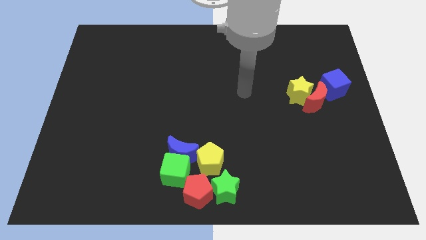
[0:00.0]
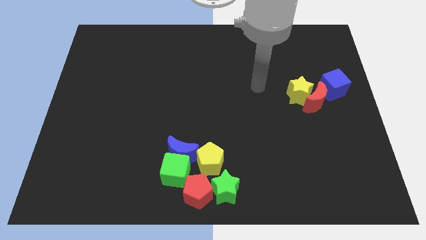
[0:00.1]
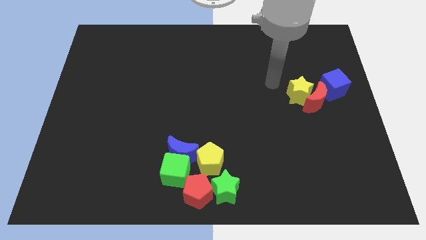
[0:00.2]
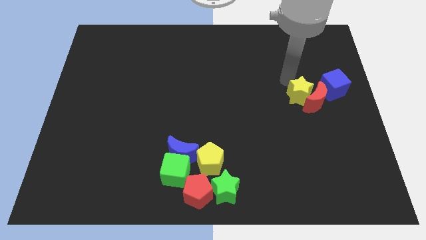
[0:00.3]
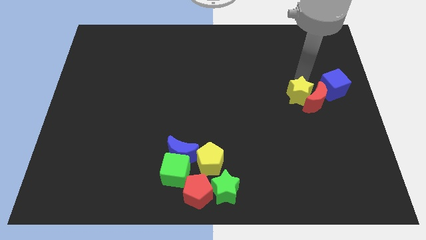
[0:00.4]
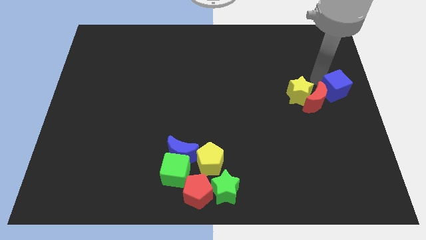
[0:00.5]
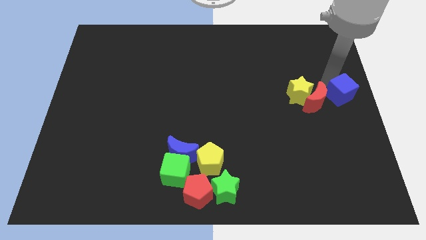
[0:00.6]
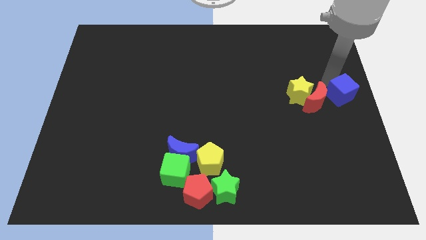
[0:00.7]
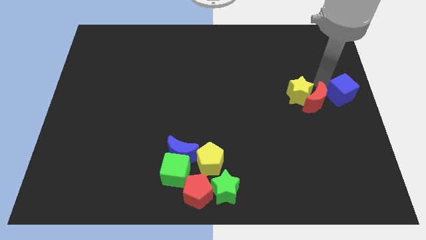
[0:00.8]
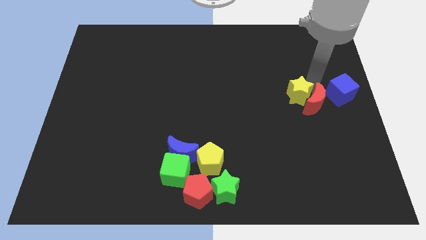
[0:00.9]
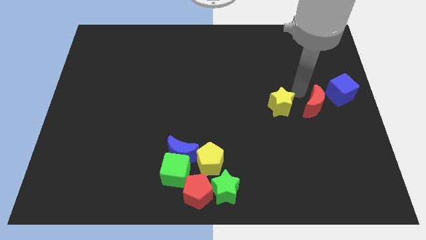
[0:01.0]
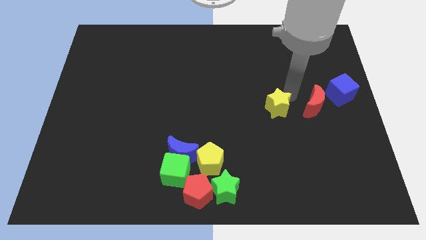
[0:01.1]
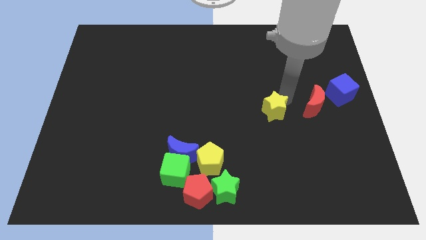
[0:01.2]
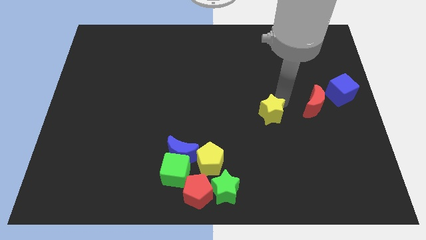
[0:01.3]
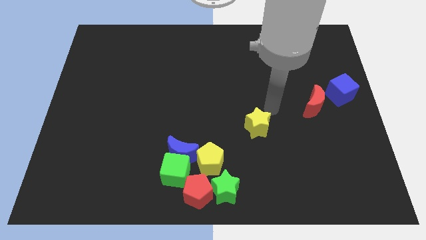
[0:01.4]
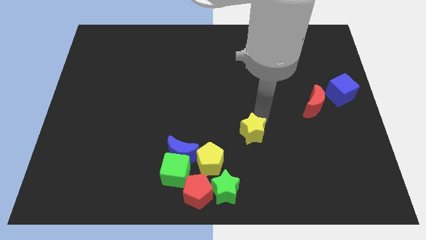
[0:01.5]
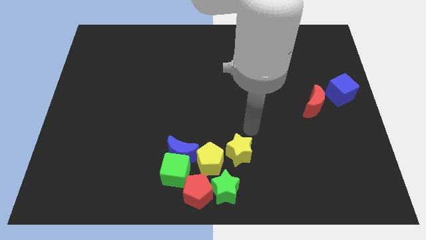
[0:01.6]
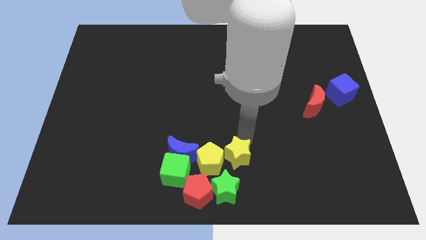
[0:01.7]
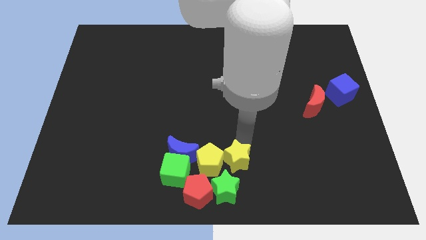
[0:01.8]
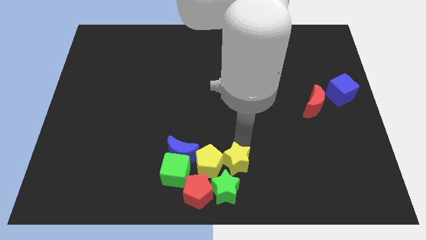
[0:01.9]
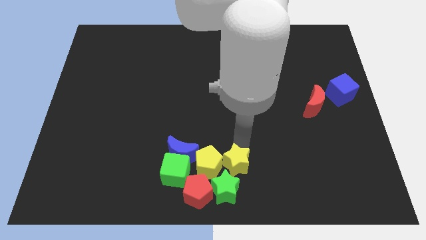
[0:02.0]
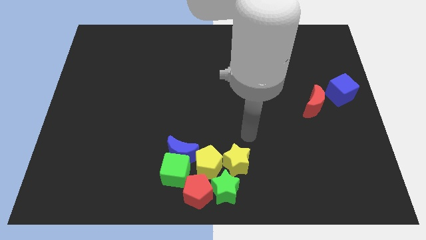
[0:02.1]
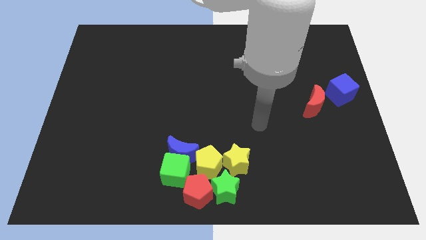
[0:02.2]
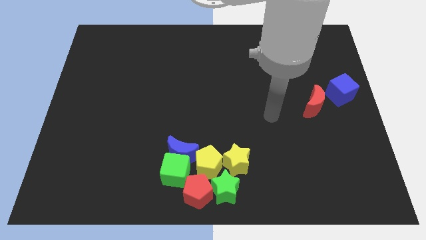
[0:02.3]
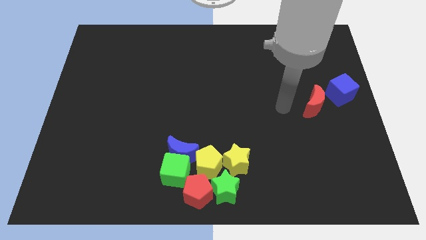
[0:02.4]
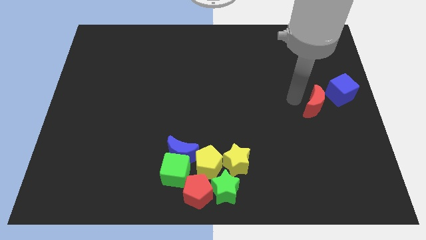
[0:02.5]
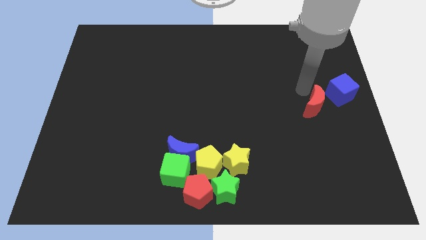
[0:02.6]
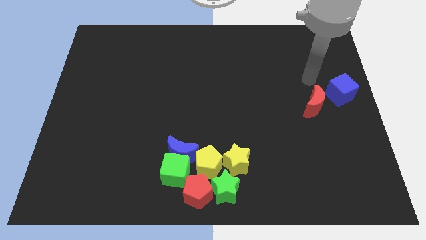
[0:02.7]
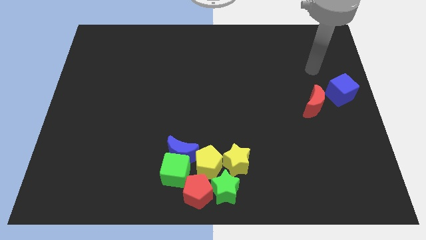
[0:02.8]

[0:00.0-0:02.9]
place the yellow star right to the yellow pentagon

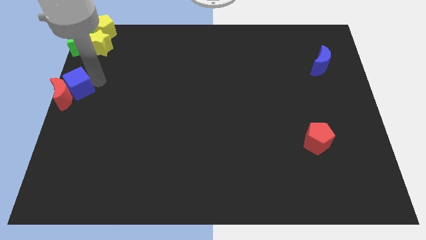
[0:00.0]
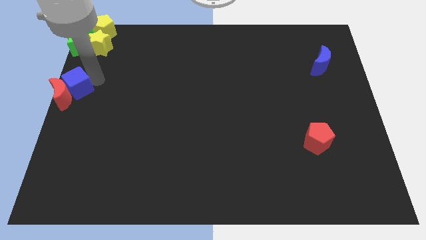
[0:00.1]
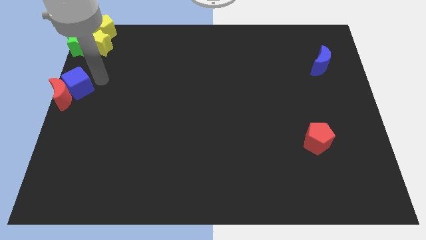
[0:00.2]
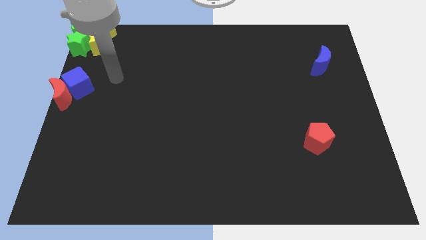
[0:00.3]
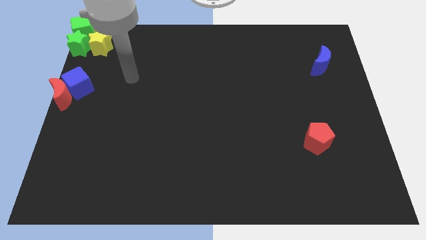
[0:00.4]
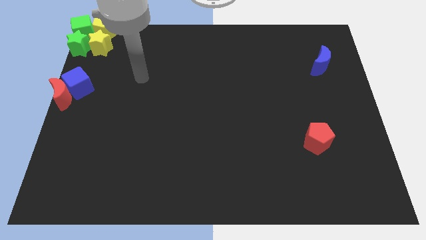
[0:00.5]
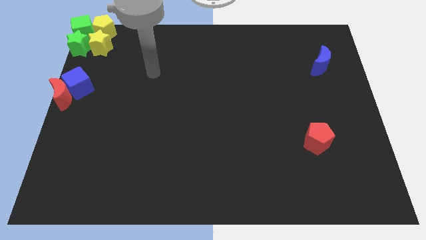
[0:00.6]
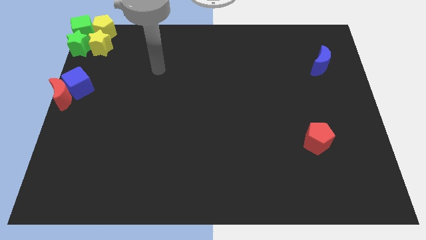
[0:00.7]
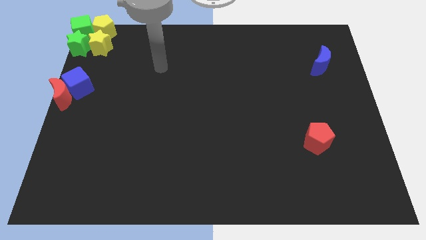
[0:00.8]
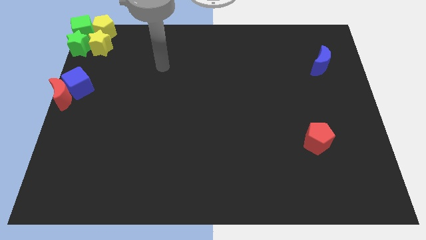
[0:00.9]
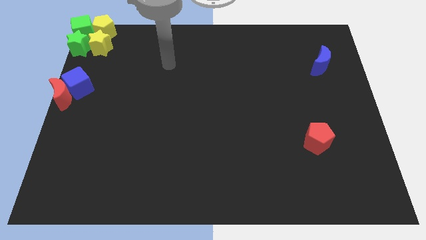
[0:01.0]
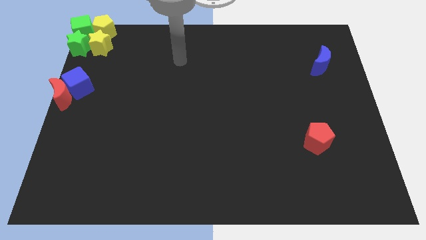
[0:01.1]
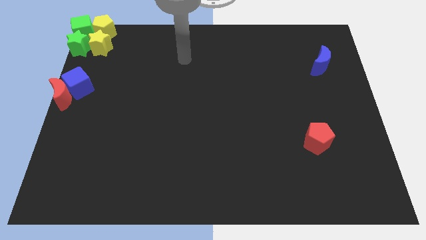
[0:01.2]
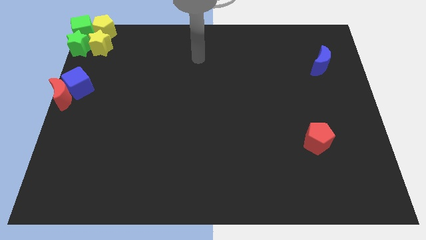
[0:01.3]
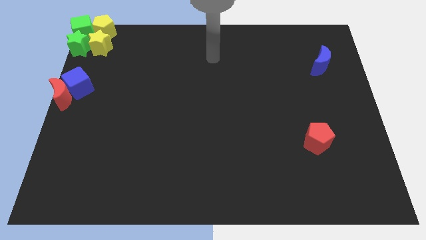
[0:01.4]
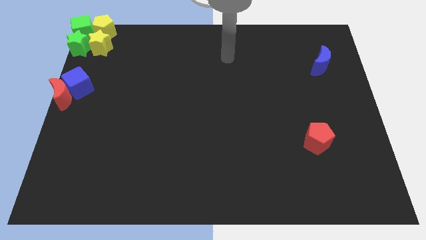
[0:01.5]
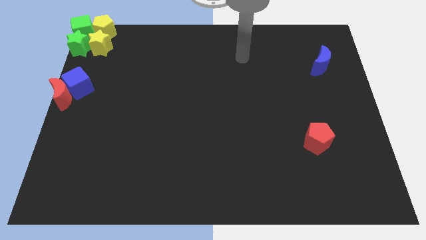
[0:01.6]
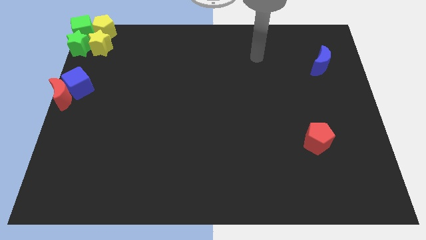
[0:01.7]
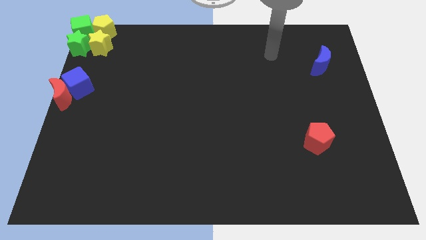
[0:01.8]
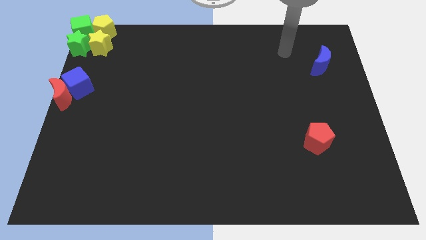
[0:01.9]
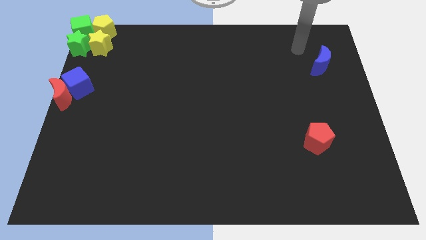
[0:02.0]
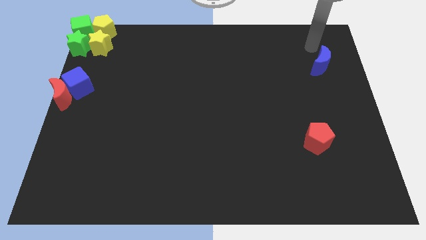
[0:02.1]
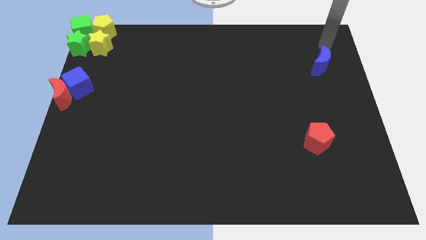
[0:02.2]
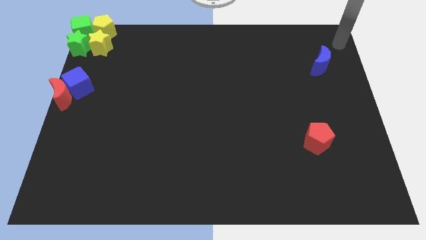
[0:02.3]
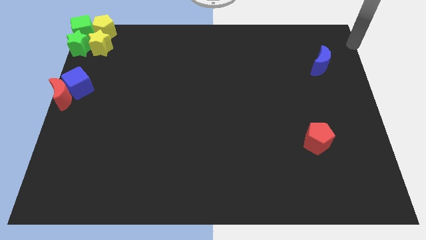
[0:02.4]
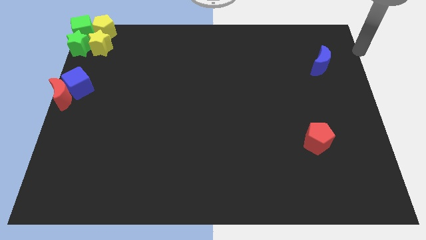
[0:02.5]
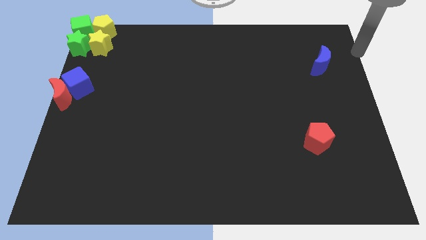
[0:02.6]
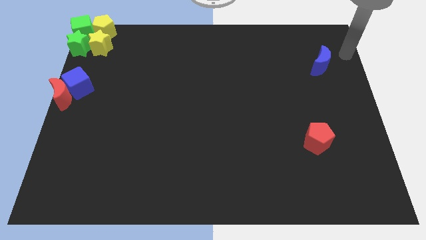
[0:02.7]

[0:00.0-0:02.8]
move your arm to the right top of the blue crescent

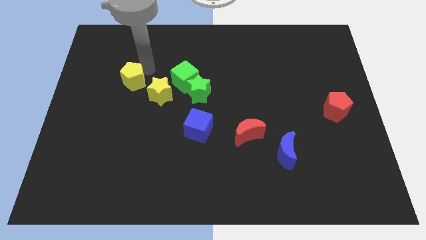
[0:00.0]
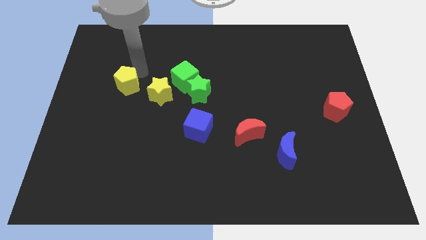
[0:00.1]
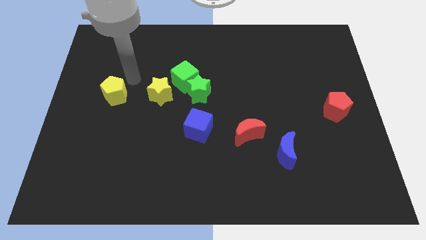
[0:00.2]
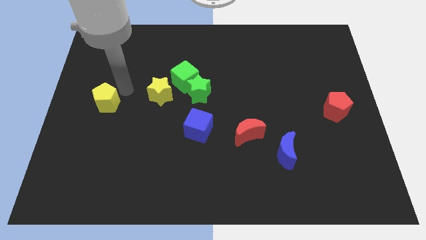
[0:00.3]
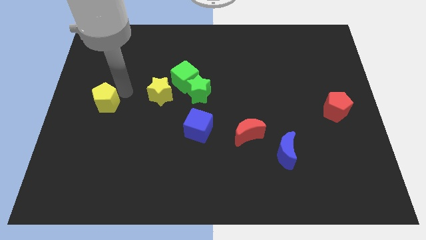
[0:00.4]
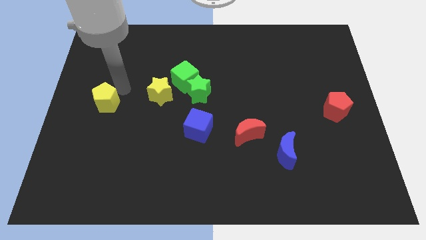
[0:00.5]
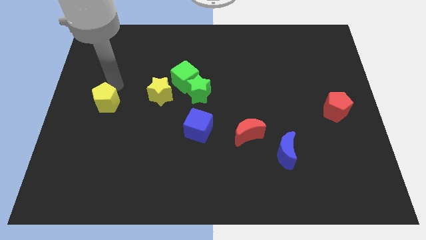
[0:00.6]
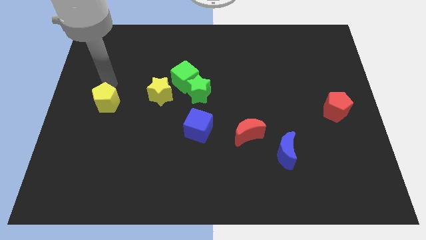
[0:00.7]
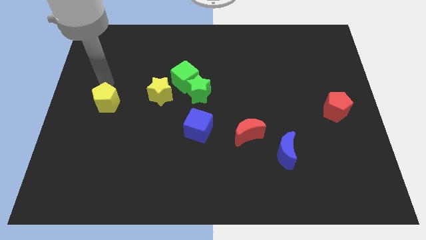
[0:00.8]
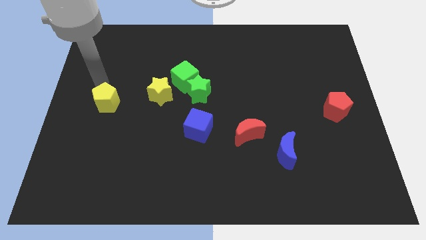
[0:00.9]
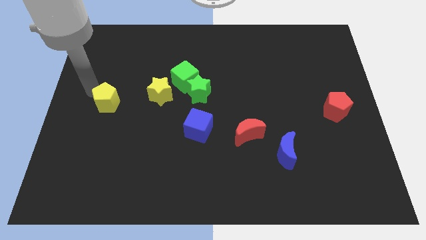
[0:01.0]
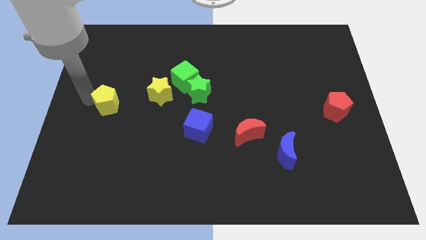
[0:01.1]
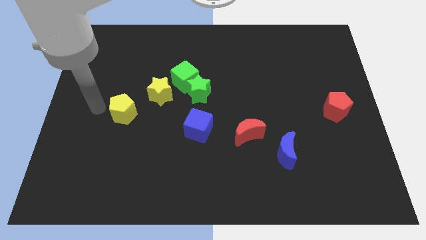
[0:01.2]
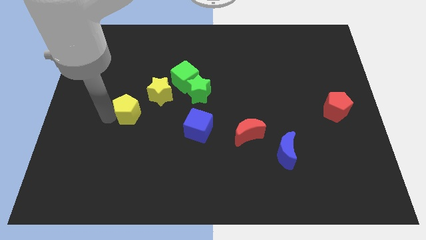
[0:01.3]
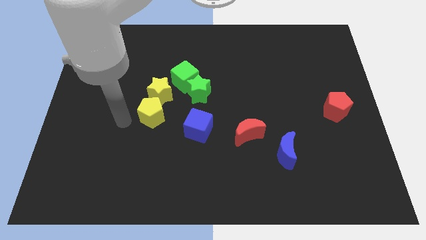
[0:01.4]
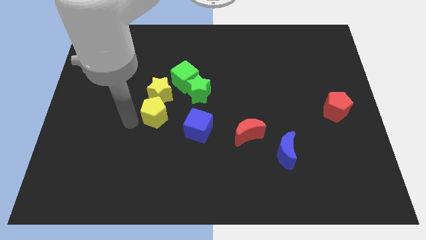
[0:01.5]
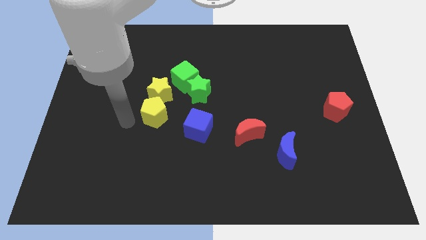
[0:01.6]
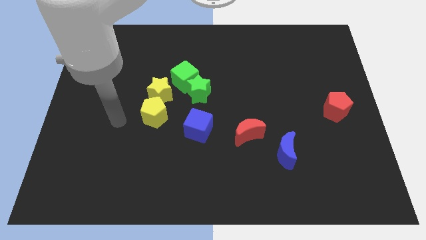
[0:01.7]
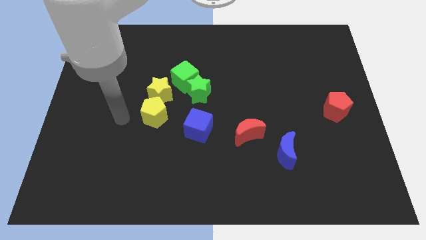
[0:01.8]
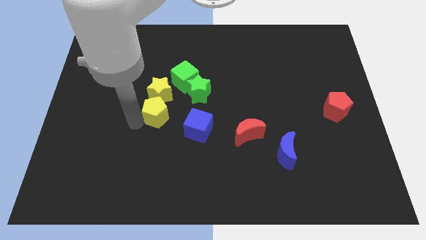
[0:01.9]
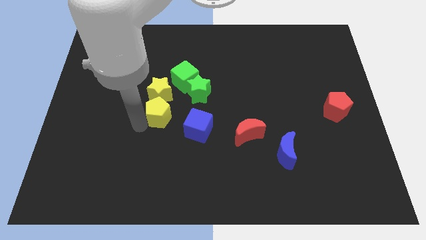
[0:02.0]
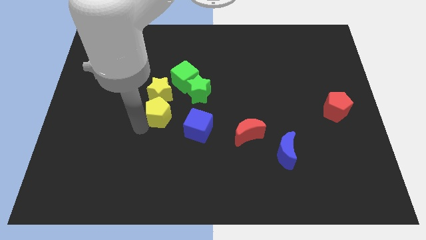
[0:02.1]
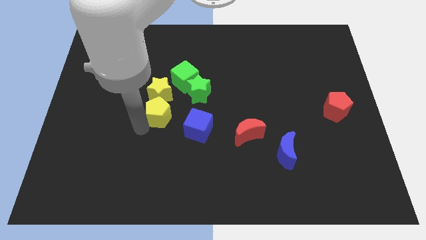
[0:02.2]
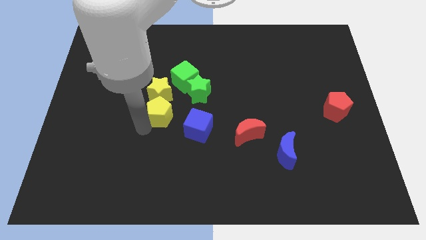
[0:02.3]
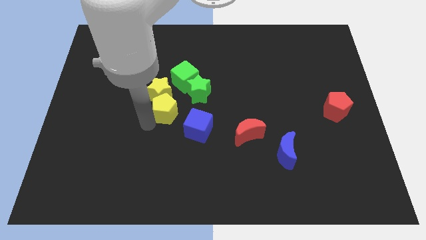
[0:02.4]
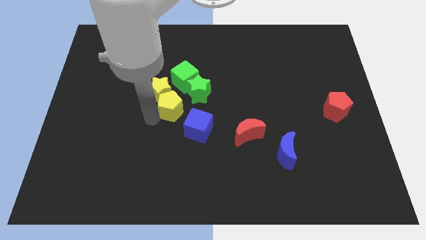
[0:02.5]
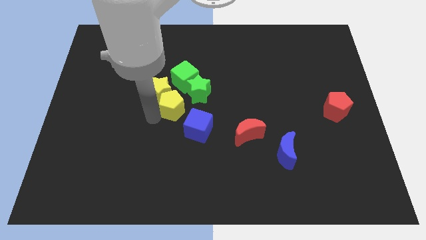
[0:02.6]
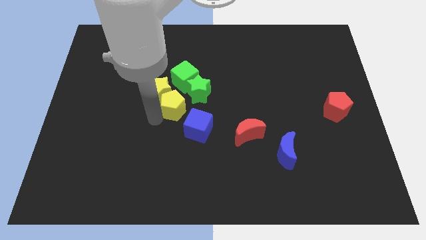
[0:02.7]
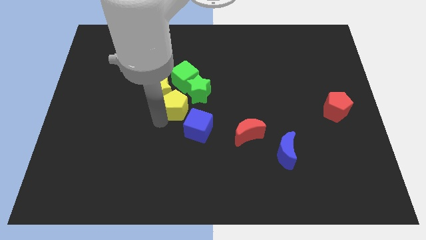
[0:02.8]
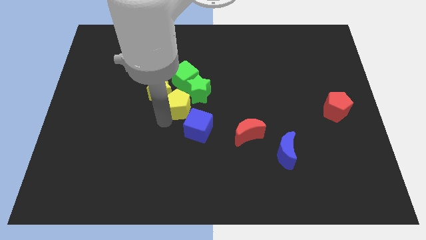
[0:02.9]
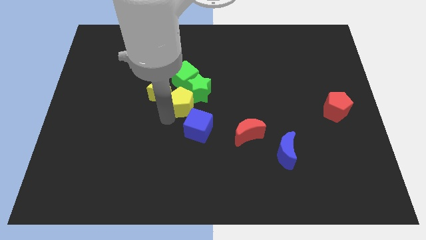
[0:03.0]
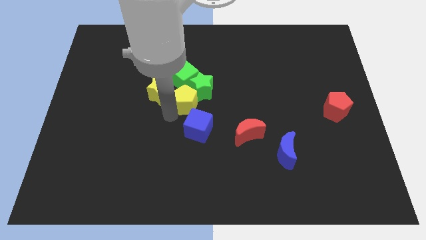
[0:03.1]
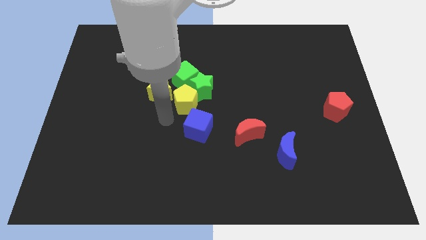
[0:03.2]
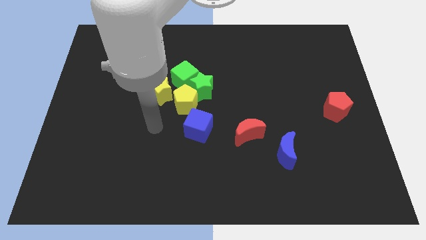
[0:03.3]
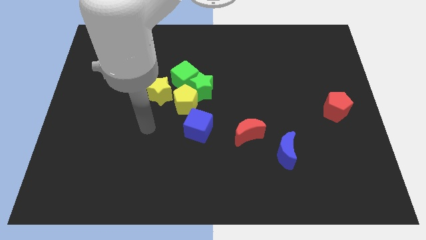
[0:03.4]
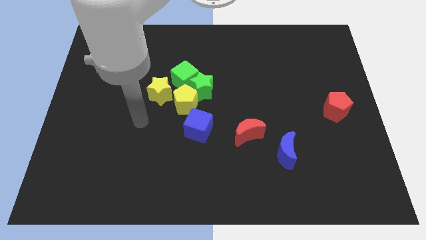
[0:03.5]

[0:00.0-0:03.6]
move the yellow pentagon vertically below the green cube
